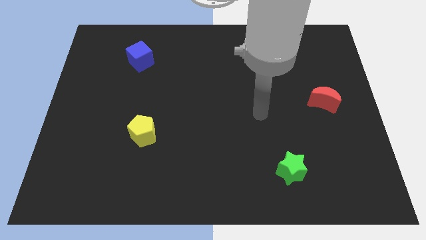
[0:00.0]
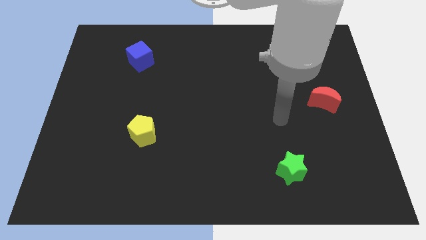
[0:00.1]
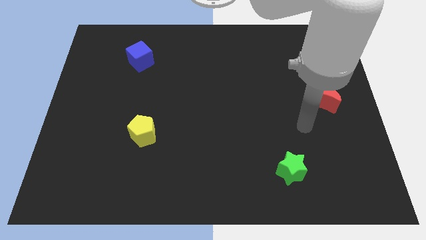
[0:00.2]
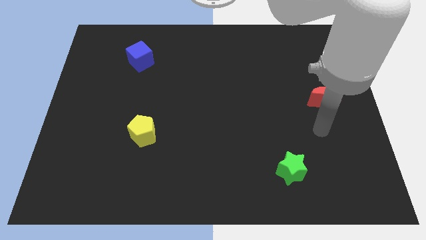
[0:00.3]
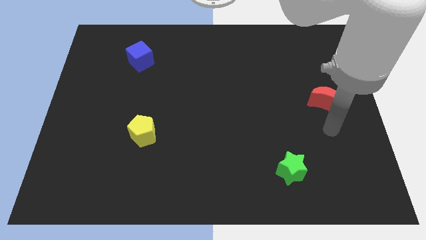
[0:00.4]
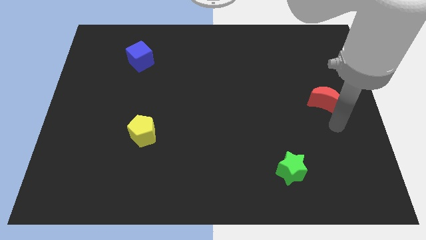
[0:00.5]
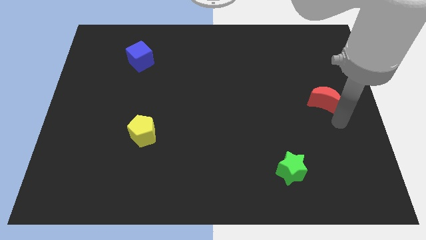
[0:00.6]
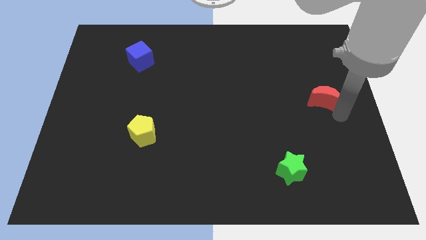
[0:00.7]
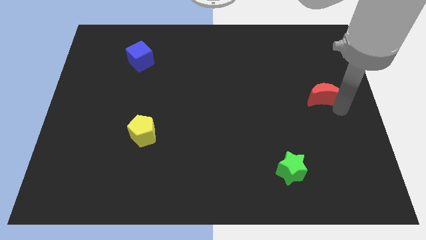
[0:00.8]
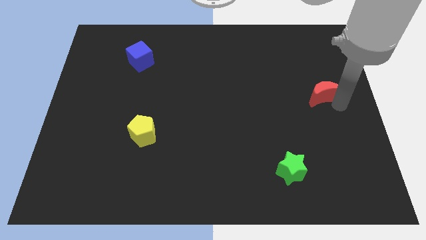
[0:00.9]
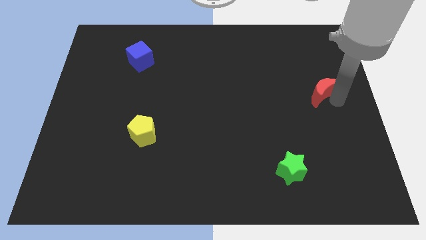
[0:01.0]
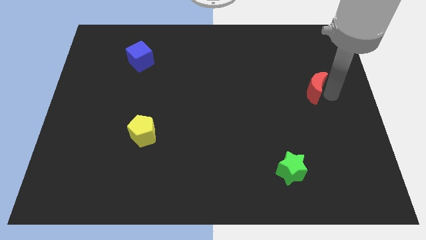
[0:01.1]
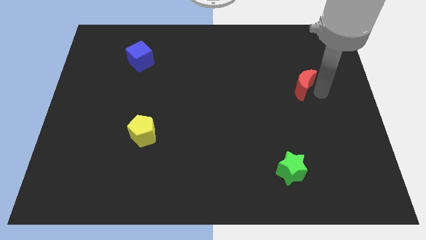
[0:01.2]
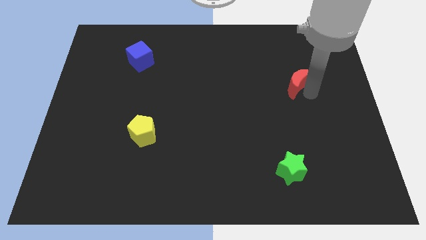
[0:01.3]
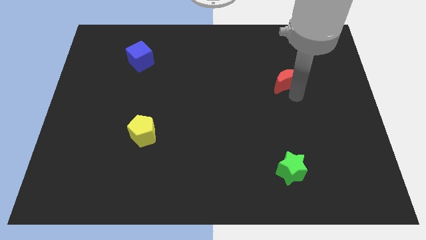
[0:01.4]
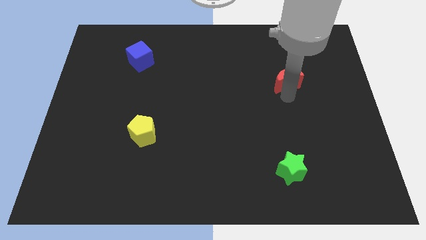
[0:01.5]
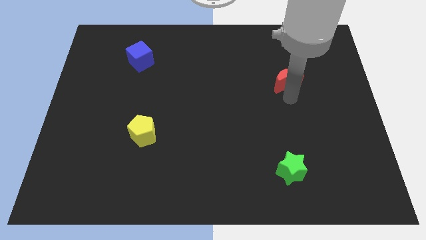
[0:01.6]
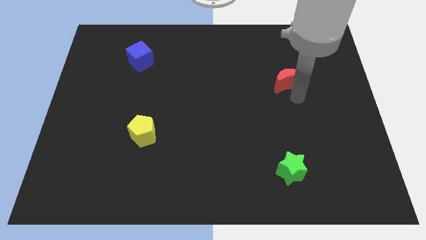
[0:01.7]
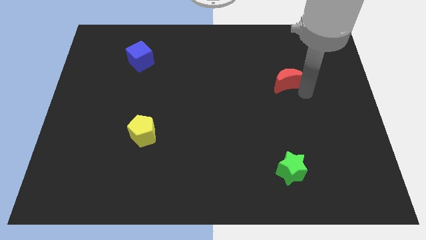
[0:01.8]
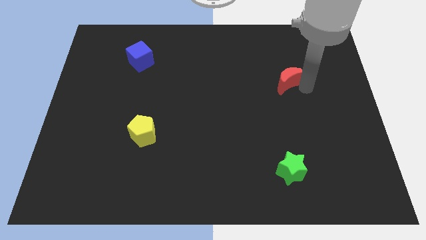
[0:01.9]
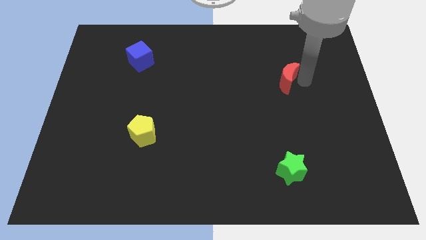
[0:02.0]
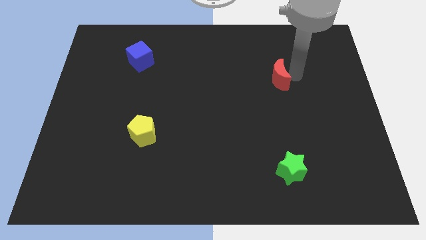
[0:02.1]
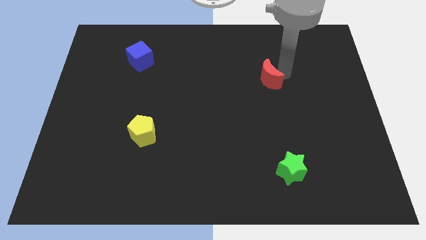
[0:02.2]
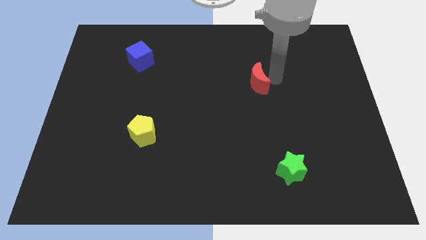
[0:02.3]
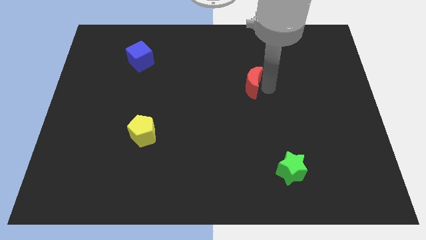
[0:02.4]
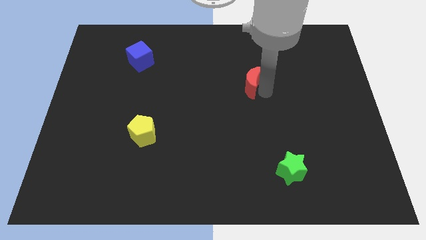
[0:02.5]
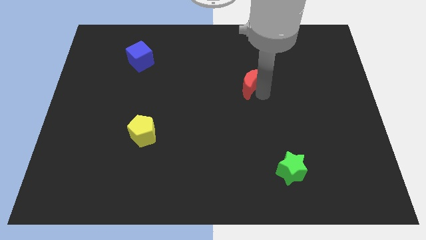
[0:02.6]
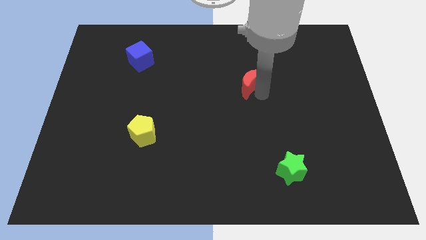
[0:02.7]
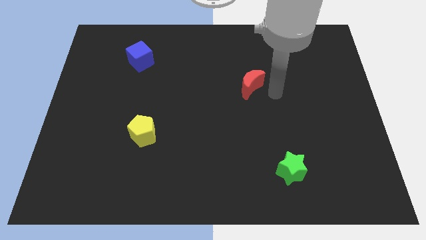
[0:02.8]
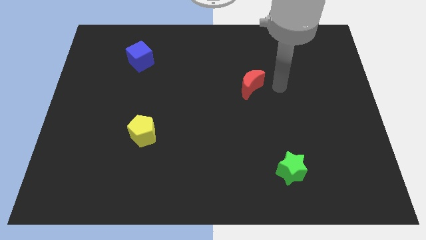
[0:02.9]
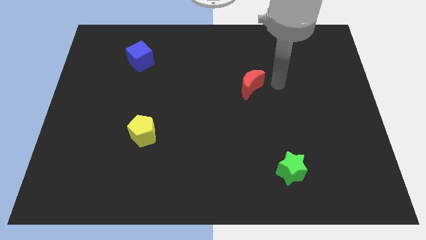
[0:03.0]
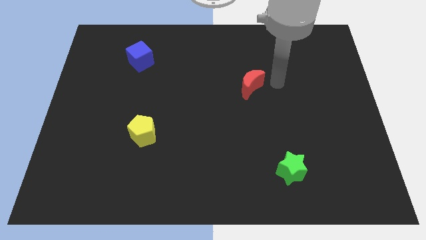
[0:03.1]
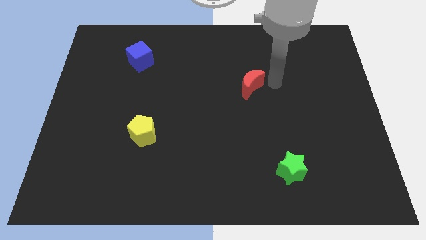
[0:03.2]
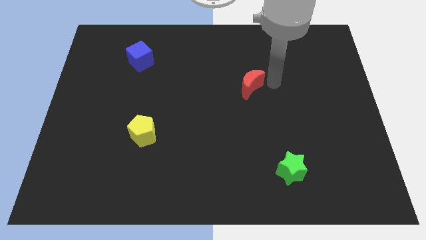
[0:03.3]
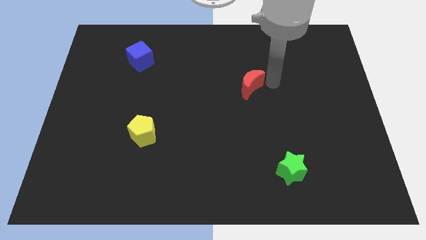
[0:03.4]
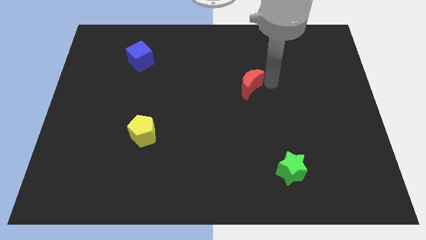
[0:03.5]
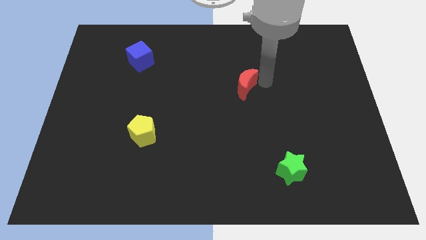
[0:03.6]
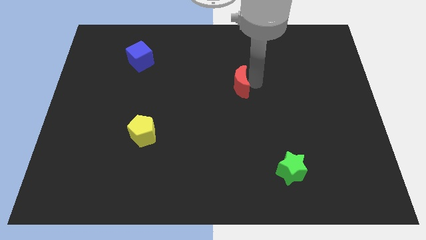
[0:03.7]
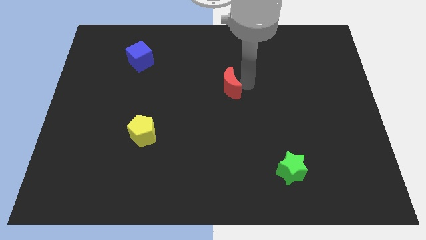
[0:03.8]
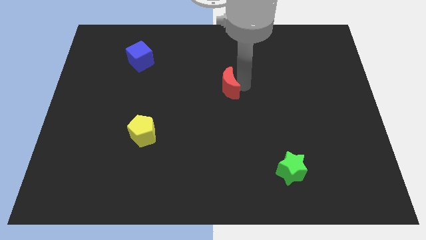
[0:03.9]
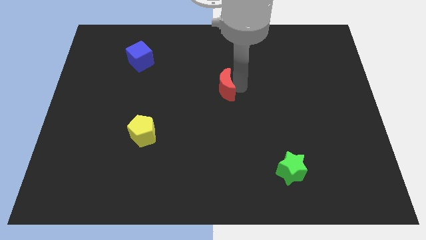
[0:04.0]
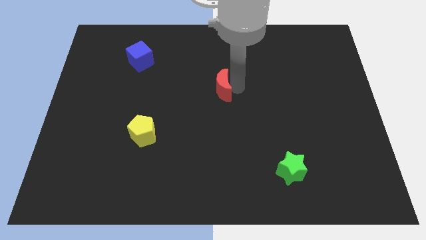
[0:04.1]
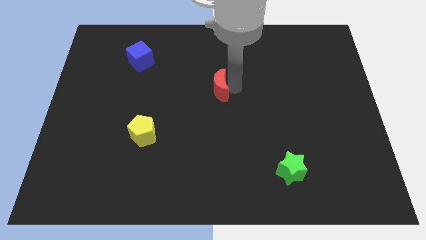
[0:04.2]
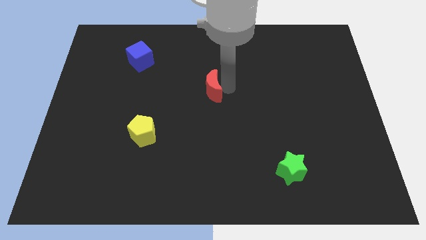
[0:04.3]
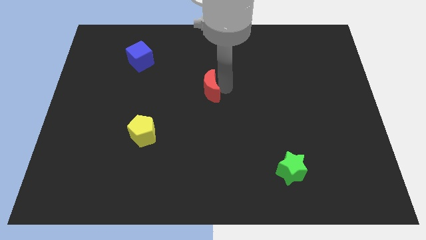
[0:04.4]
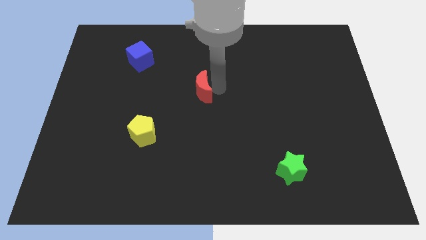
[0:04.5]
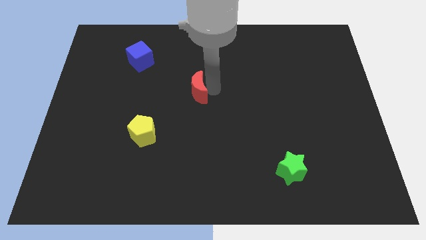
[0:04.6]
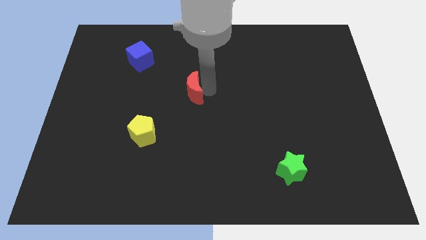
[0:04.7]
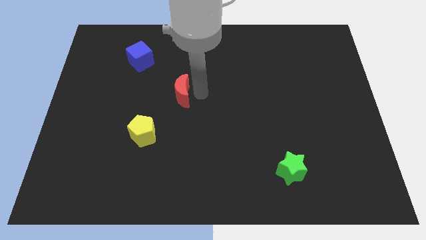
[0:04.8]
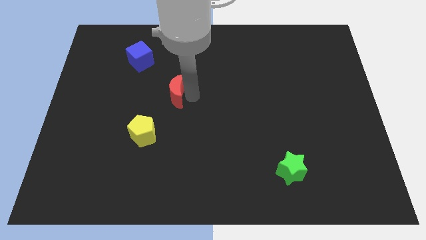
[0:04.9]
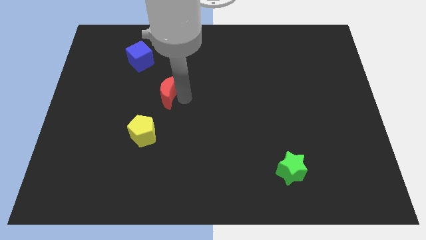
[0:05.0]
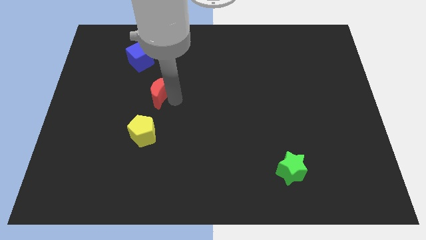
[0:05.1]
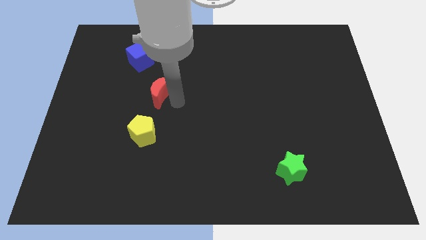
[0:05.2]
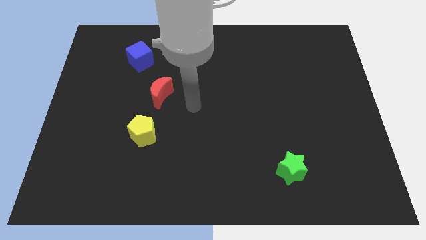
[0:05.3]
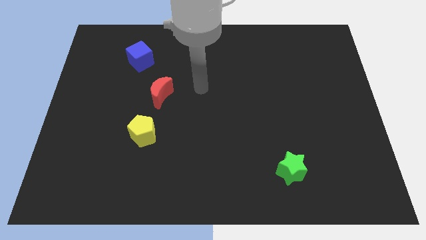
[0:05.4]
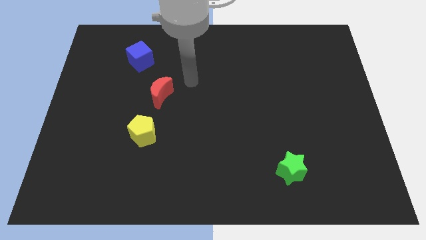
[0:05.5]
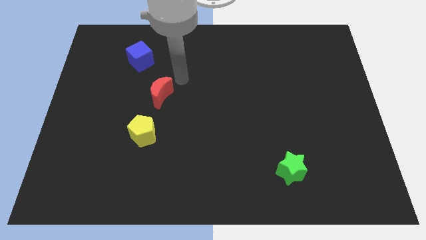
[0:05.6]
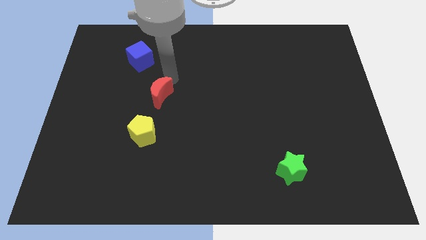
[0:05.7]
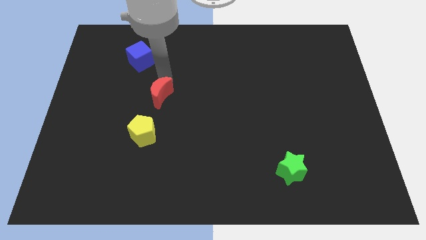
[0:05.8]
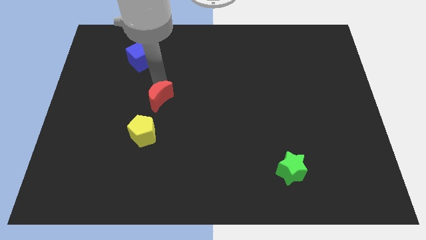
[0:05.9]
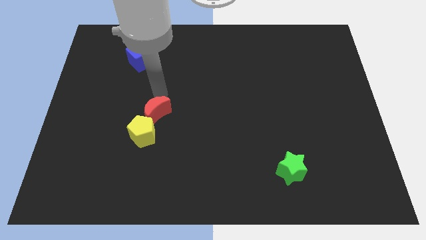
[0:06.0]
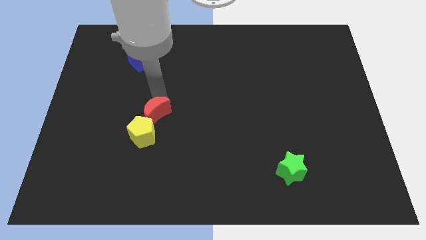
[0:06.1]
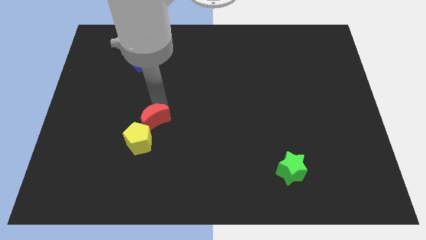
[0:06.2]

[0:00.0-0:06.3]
push the moon to the yellow pentagon

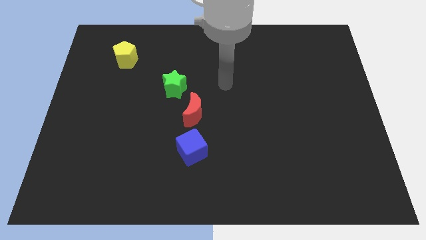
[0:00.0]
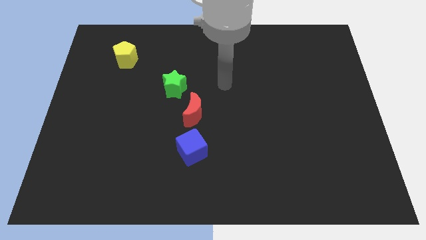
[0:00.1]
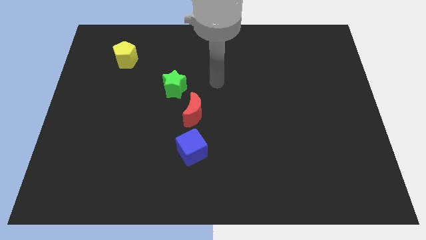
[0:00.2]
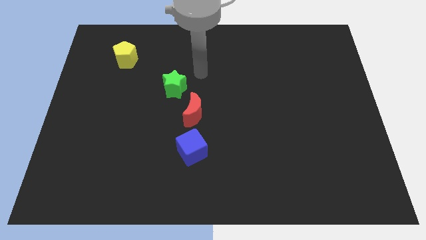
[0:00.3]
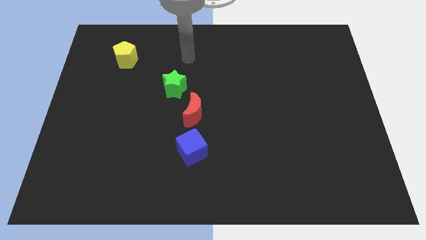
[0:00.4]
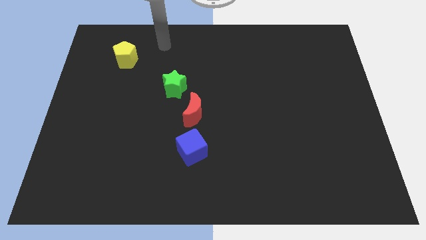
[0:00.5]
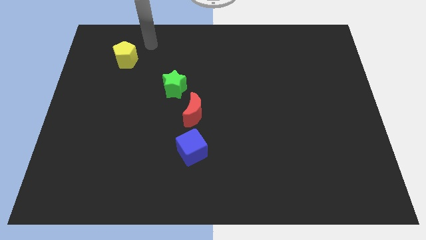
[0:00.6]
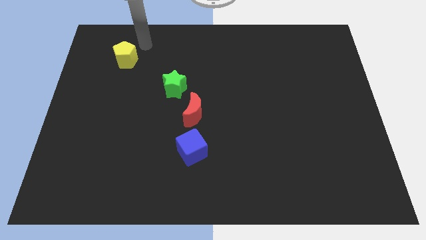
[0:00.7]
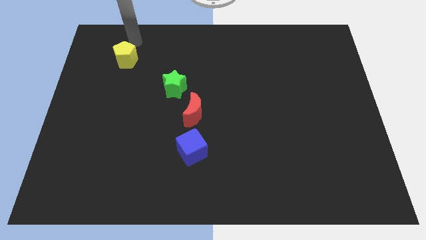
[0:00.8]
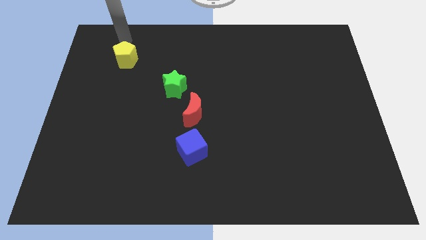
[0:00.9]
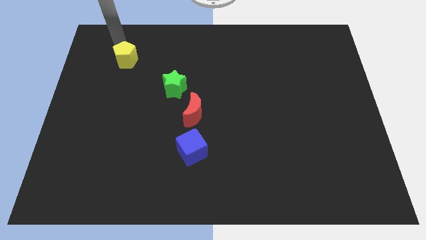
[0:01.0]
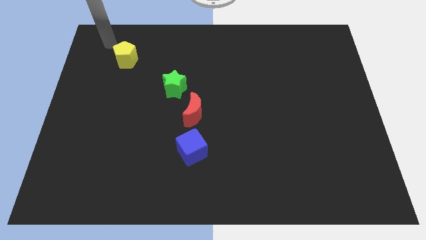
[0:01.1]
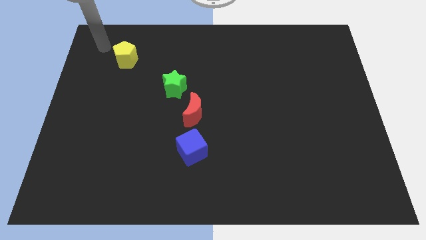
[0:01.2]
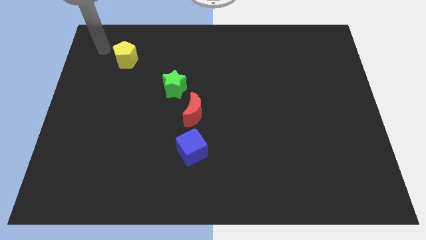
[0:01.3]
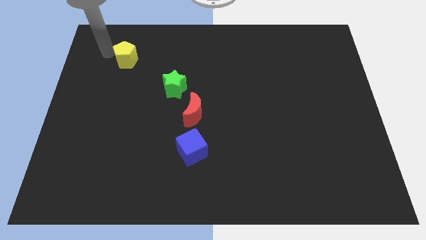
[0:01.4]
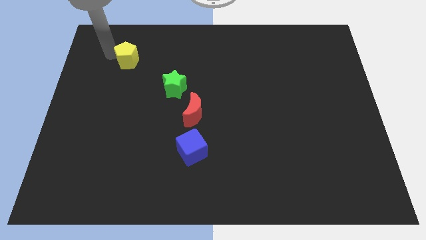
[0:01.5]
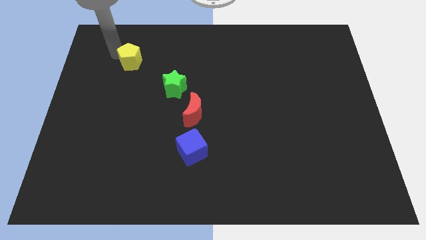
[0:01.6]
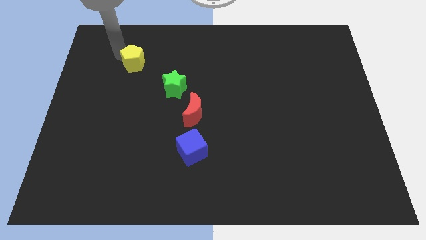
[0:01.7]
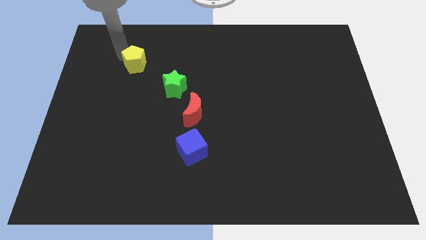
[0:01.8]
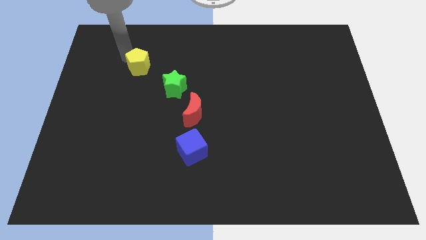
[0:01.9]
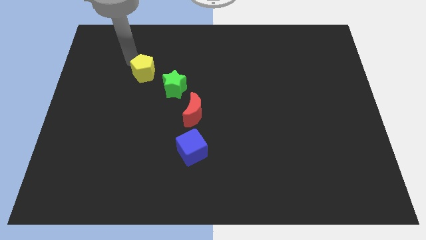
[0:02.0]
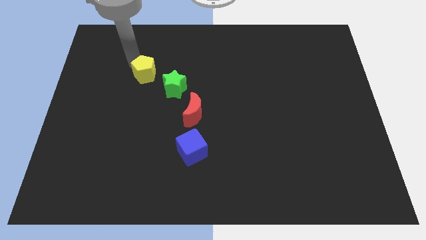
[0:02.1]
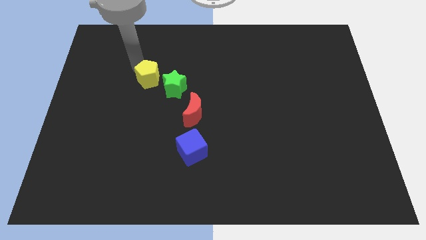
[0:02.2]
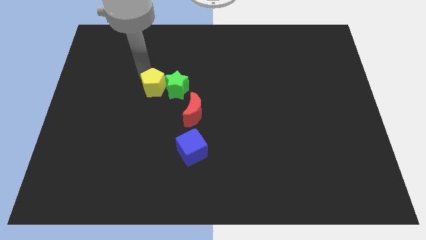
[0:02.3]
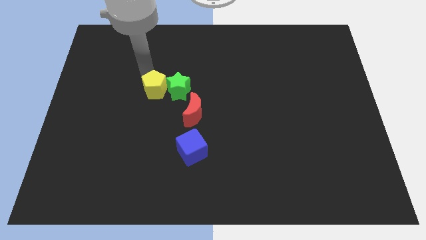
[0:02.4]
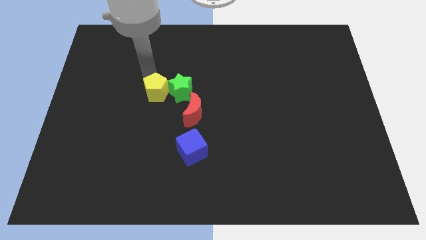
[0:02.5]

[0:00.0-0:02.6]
slide the yellow pentagon close to the green block
